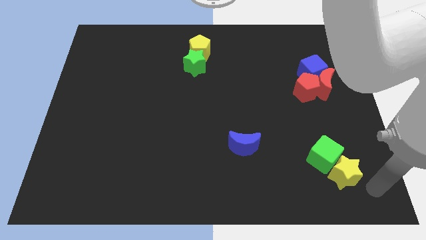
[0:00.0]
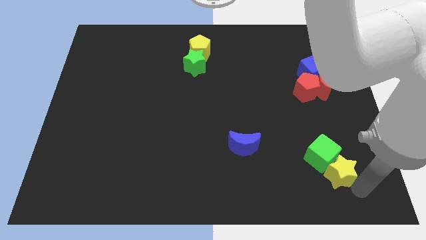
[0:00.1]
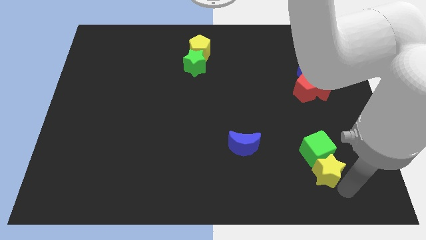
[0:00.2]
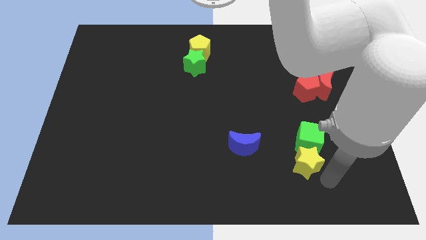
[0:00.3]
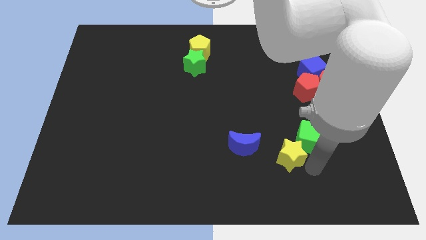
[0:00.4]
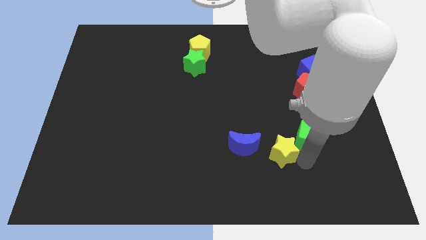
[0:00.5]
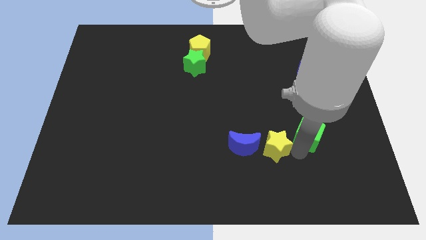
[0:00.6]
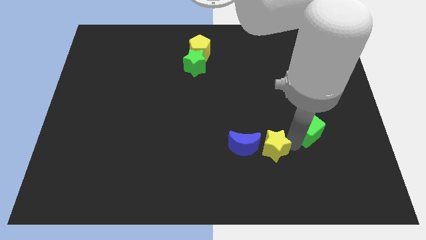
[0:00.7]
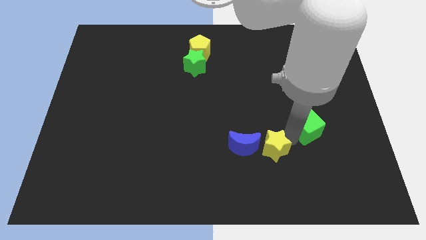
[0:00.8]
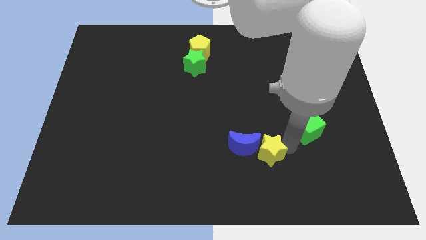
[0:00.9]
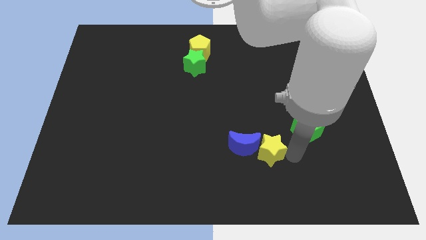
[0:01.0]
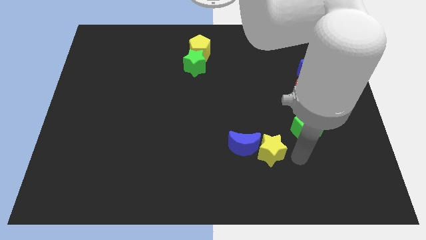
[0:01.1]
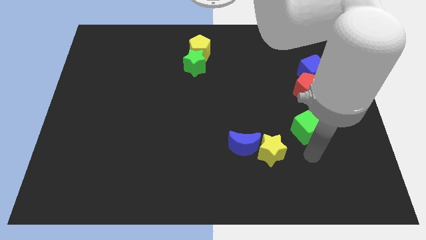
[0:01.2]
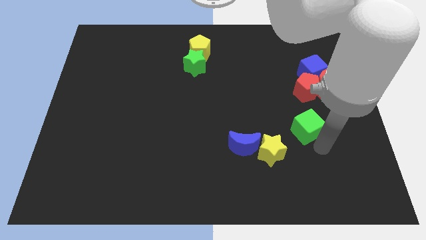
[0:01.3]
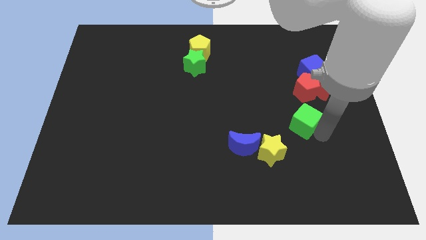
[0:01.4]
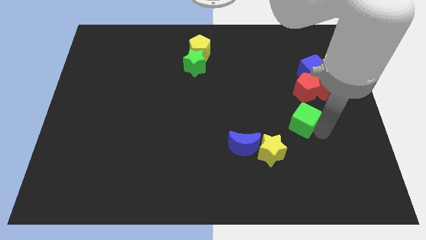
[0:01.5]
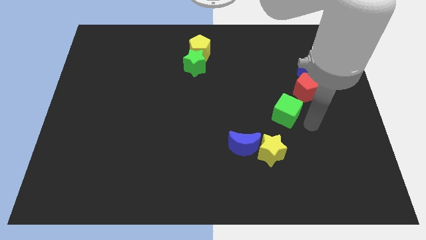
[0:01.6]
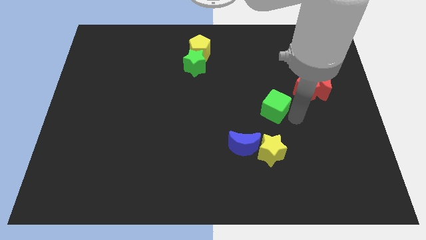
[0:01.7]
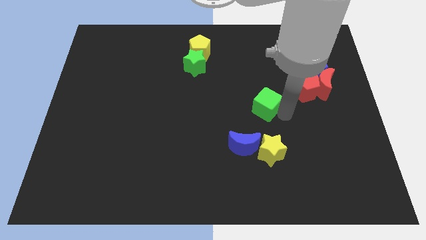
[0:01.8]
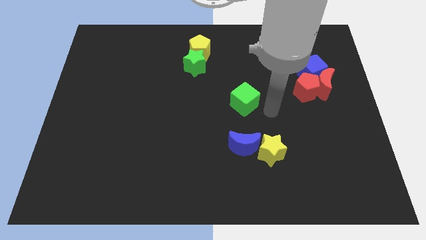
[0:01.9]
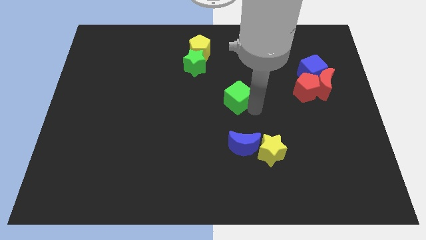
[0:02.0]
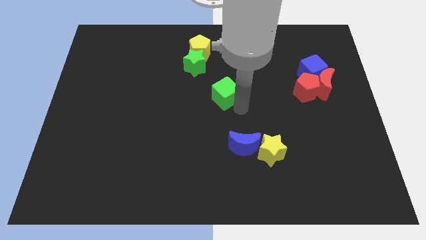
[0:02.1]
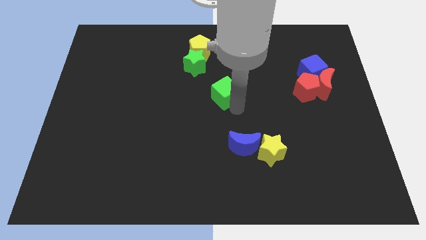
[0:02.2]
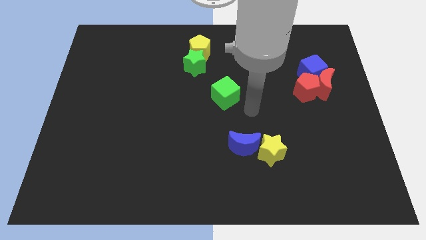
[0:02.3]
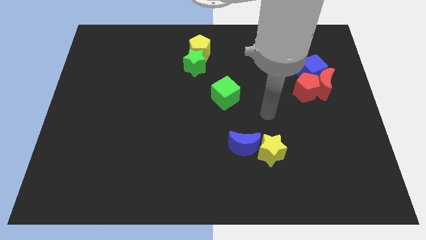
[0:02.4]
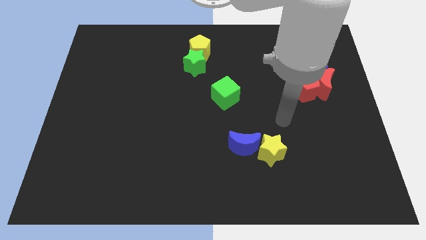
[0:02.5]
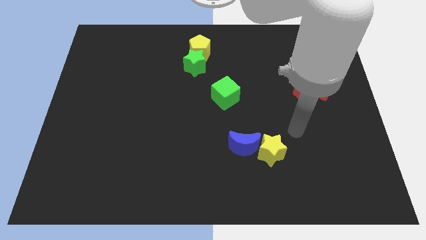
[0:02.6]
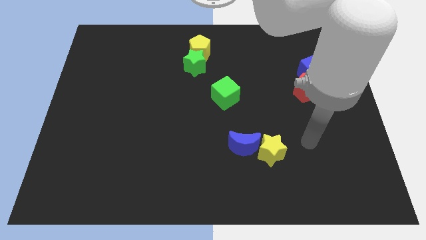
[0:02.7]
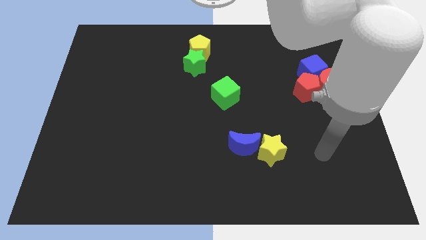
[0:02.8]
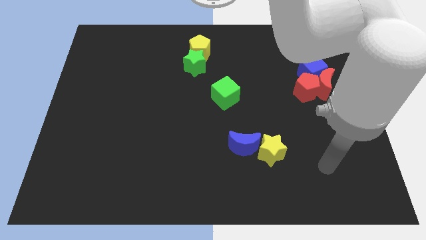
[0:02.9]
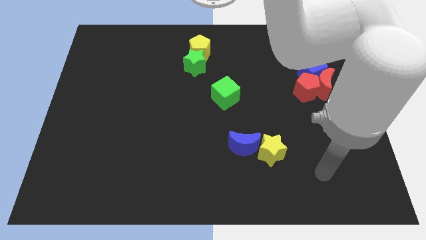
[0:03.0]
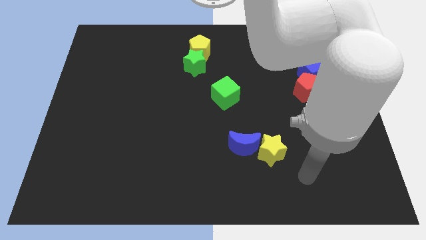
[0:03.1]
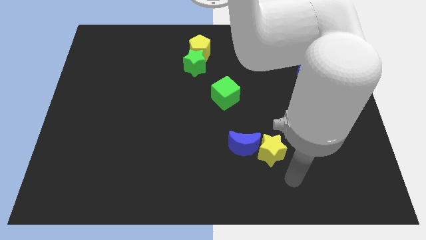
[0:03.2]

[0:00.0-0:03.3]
separate green block from yellow star

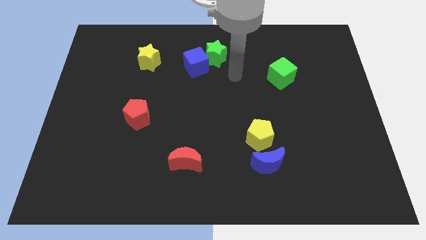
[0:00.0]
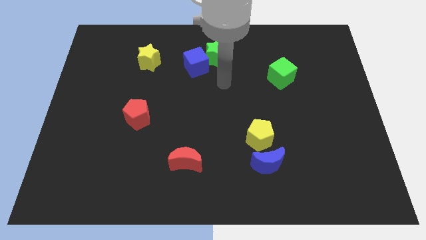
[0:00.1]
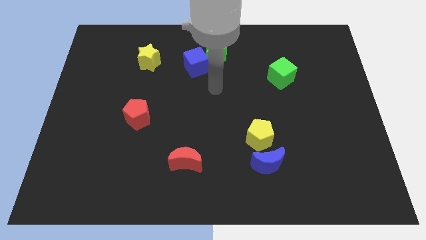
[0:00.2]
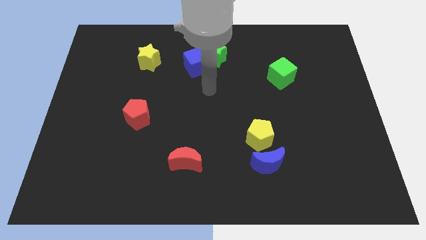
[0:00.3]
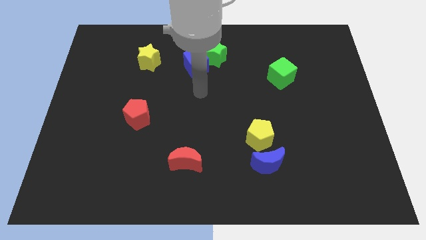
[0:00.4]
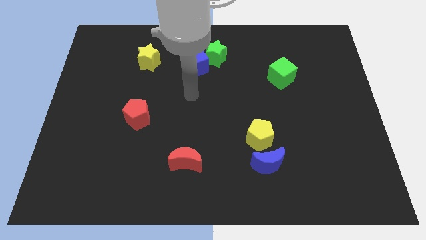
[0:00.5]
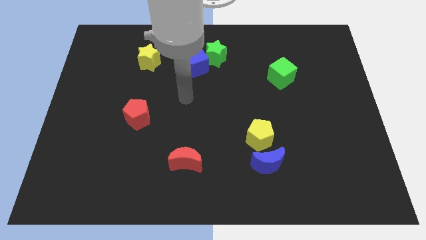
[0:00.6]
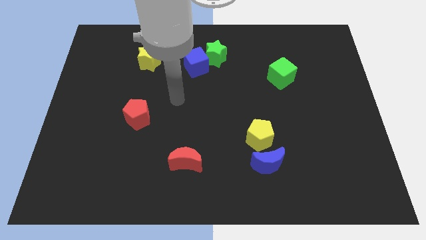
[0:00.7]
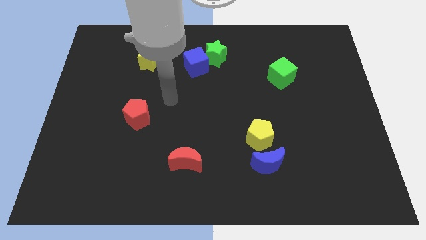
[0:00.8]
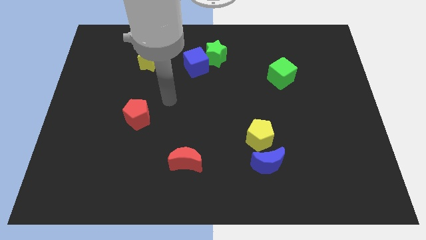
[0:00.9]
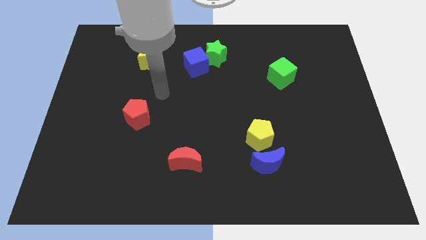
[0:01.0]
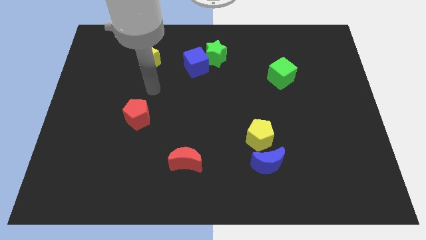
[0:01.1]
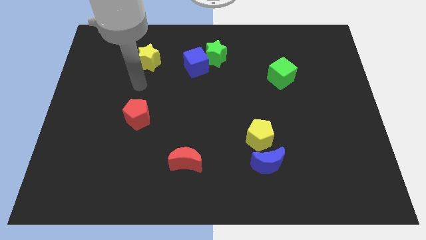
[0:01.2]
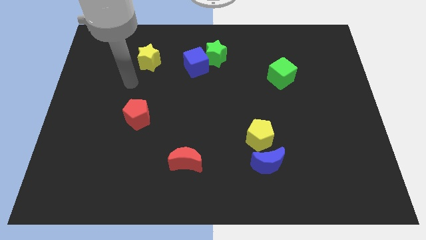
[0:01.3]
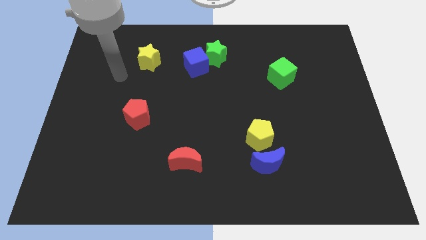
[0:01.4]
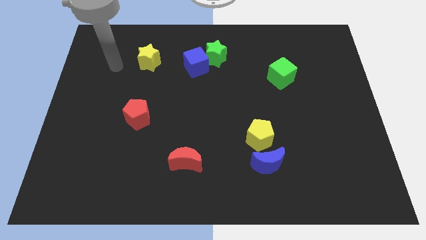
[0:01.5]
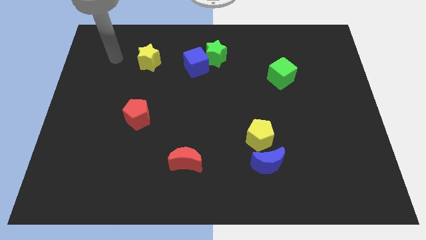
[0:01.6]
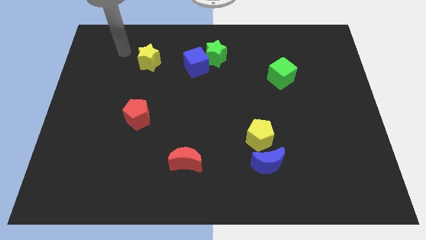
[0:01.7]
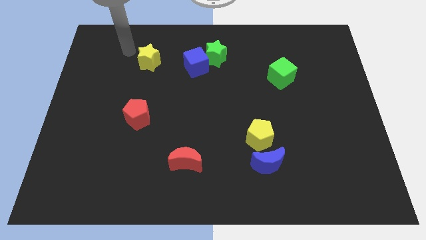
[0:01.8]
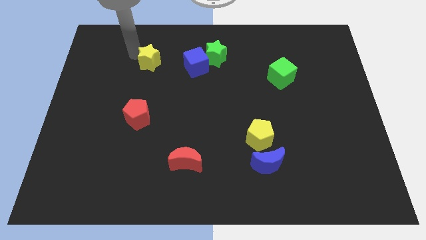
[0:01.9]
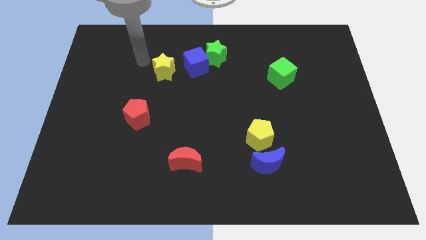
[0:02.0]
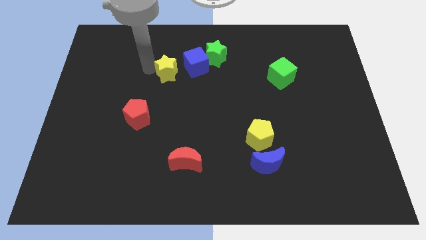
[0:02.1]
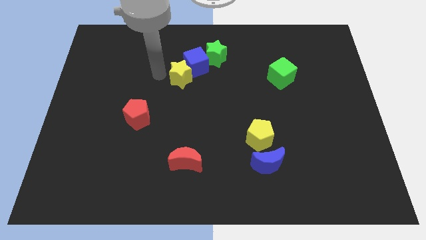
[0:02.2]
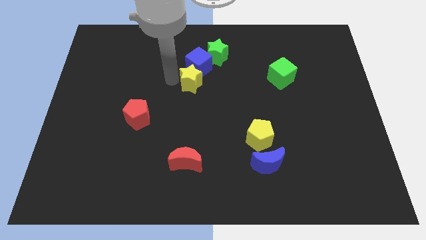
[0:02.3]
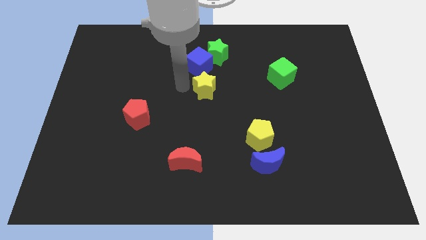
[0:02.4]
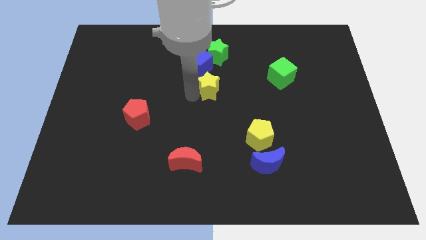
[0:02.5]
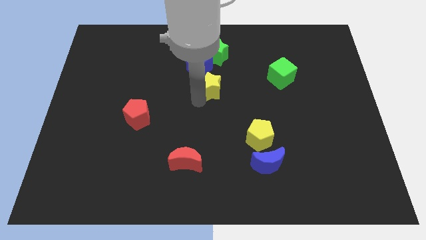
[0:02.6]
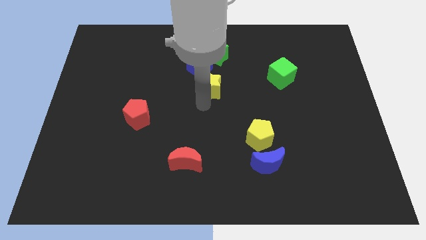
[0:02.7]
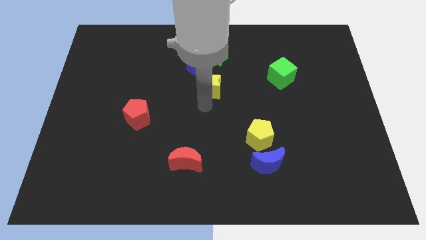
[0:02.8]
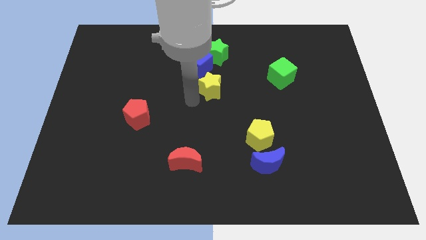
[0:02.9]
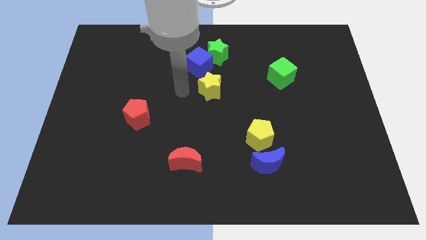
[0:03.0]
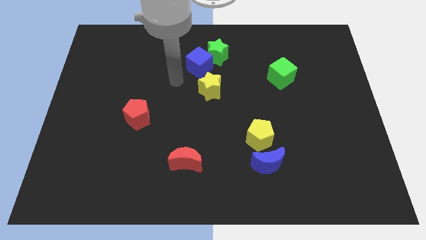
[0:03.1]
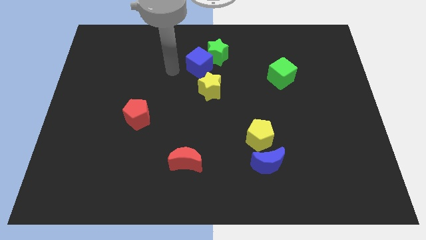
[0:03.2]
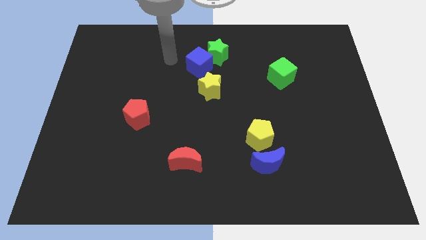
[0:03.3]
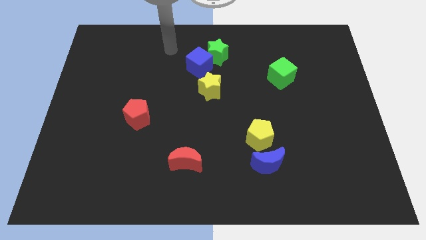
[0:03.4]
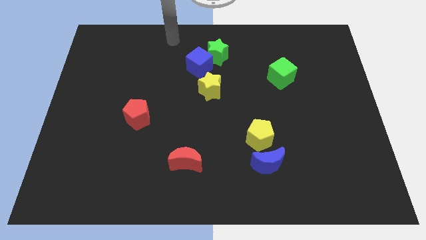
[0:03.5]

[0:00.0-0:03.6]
move the yellow star to the bottom of the green star

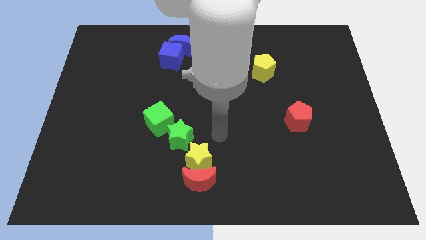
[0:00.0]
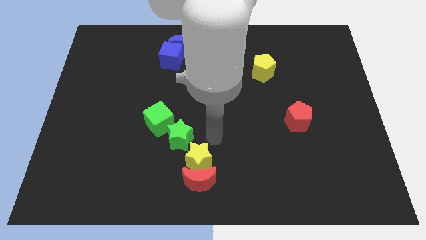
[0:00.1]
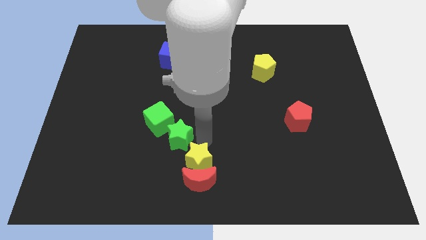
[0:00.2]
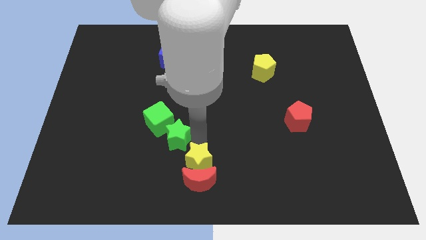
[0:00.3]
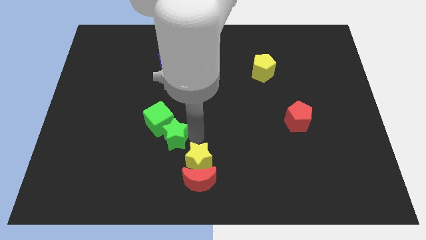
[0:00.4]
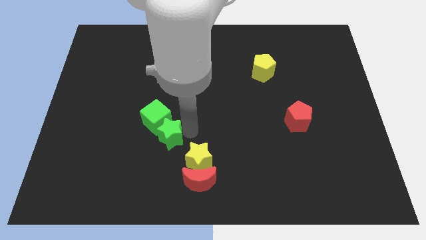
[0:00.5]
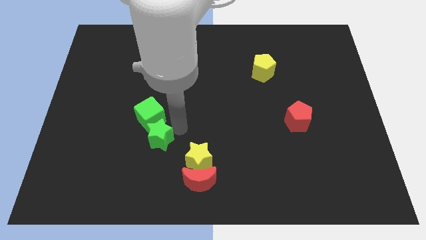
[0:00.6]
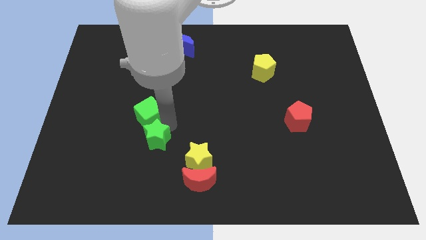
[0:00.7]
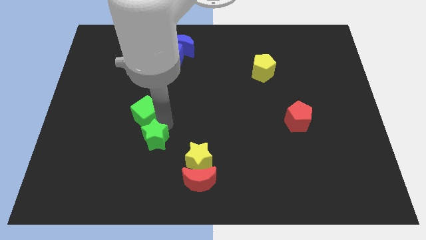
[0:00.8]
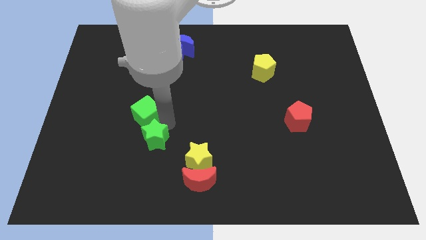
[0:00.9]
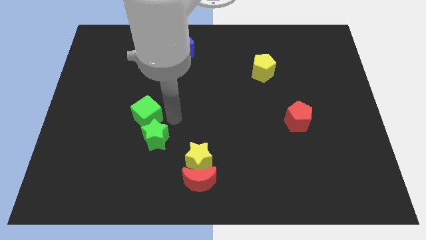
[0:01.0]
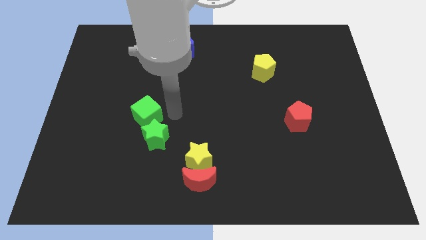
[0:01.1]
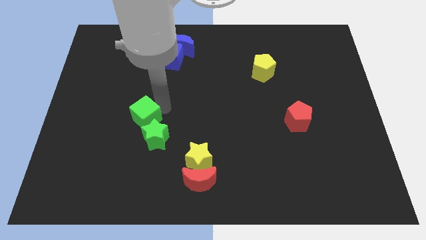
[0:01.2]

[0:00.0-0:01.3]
push the green star into the green cube

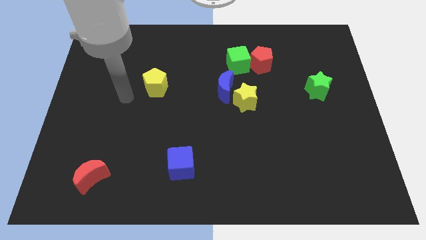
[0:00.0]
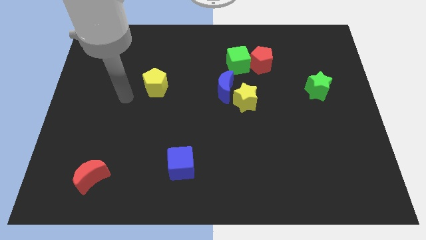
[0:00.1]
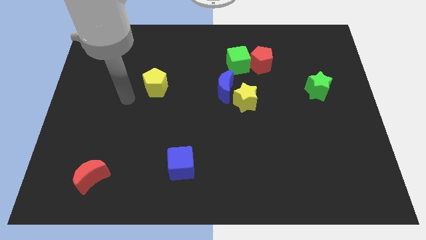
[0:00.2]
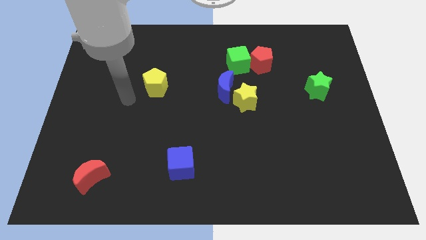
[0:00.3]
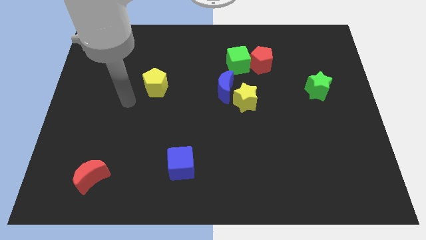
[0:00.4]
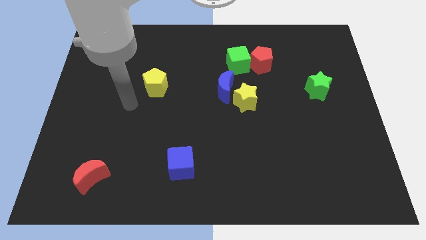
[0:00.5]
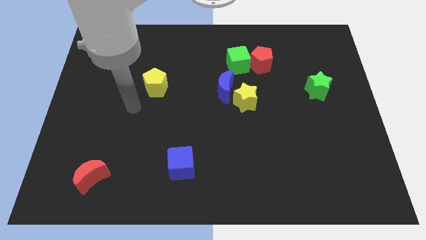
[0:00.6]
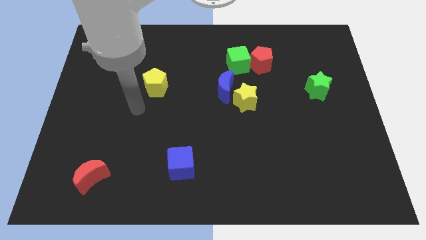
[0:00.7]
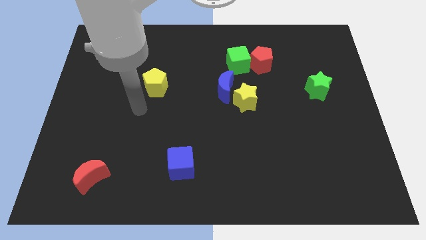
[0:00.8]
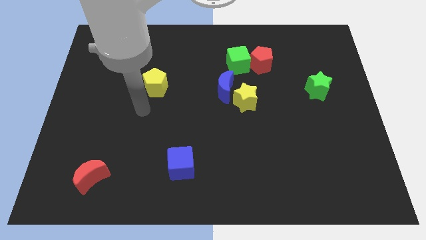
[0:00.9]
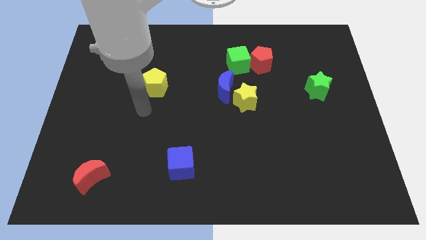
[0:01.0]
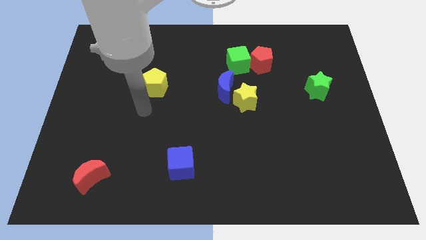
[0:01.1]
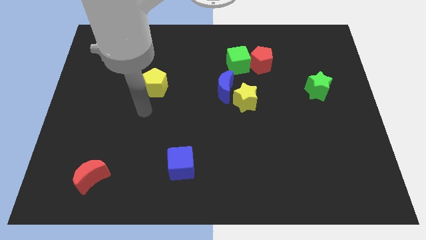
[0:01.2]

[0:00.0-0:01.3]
move arm at bottom side of the yellow pentagon
